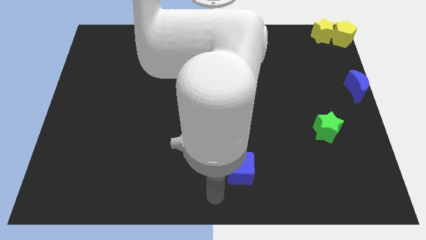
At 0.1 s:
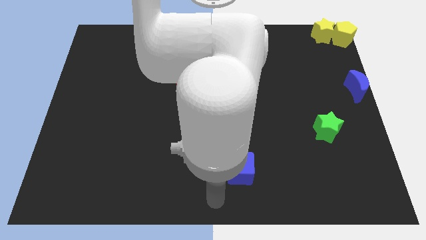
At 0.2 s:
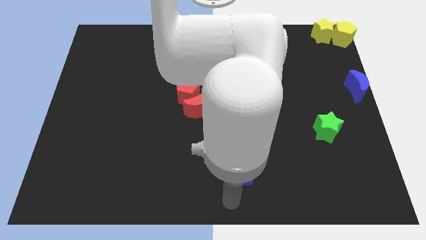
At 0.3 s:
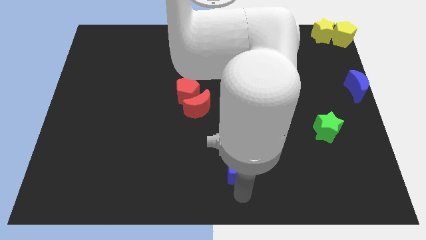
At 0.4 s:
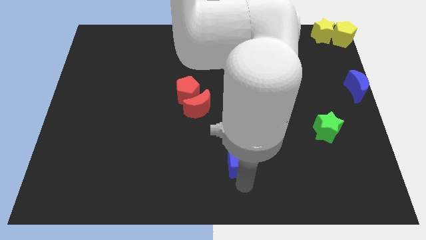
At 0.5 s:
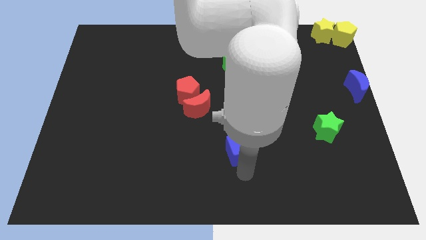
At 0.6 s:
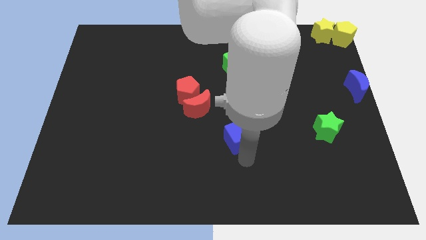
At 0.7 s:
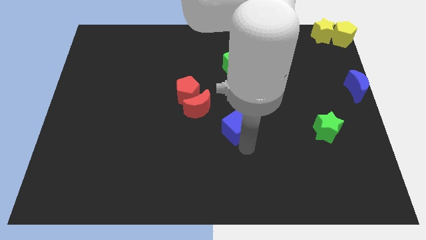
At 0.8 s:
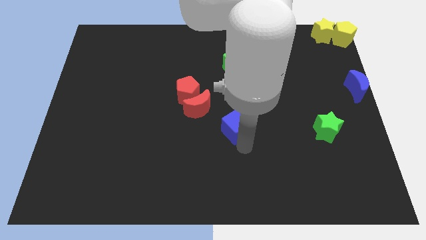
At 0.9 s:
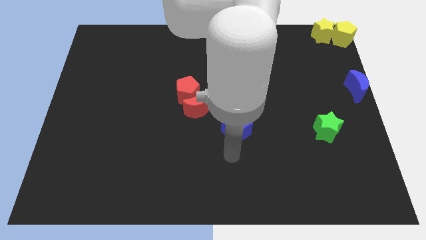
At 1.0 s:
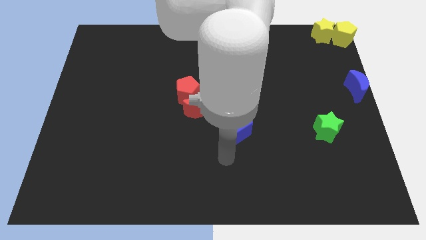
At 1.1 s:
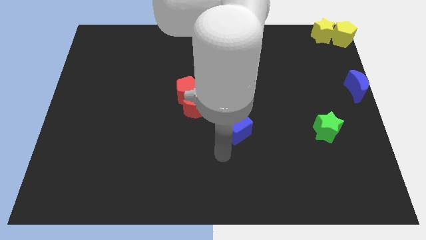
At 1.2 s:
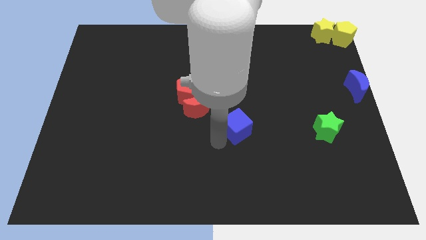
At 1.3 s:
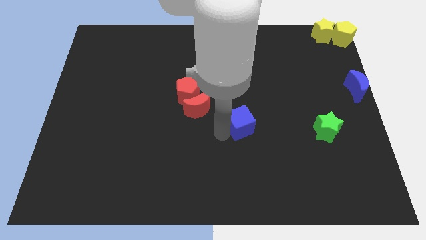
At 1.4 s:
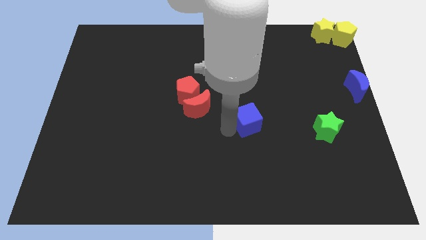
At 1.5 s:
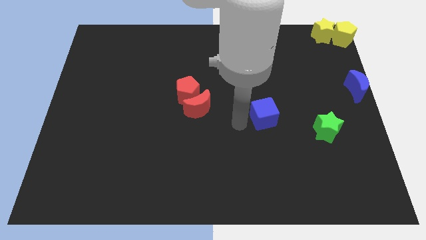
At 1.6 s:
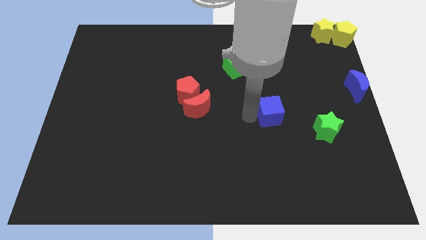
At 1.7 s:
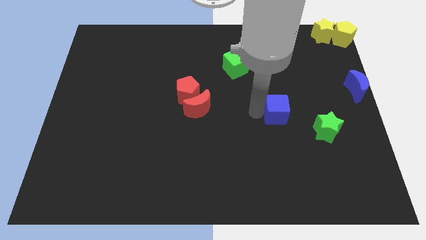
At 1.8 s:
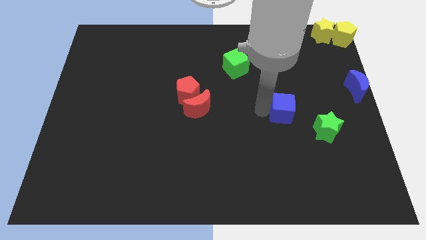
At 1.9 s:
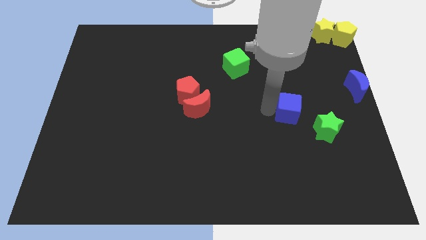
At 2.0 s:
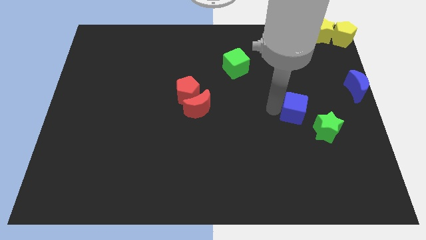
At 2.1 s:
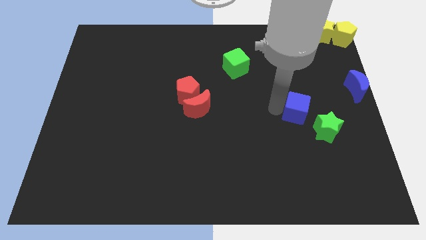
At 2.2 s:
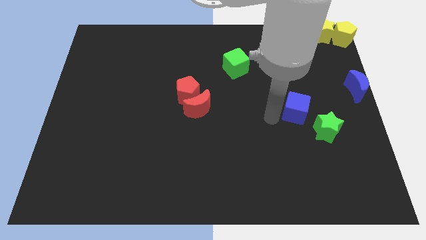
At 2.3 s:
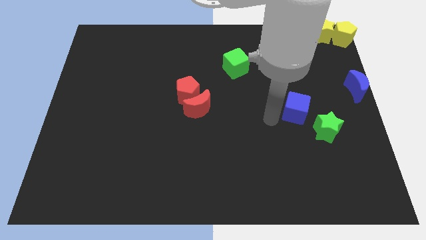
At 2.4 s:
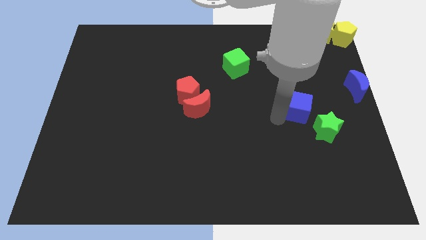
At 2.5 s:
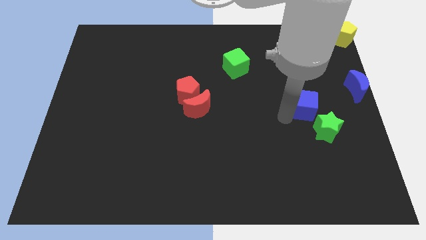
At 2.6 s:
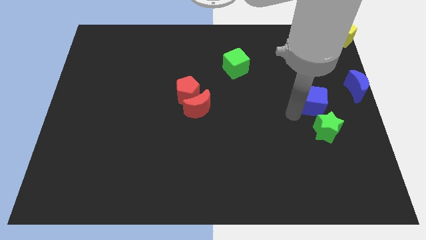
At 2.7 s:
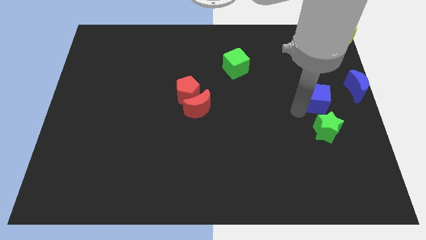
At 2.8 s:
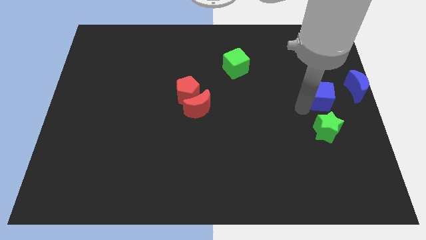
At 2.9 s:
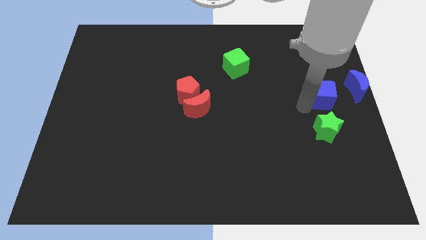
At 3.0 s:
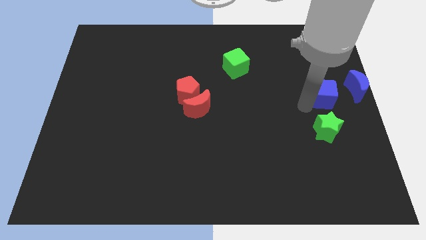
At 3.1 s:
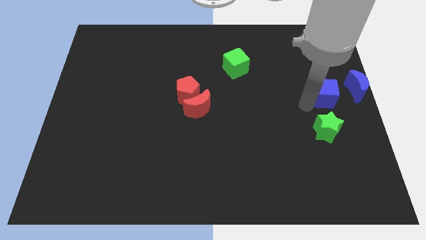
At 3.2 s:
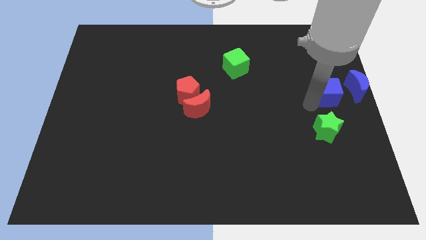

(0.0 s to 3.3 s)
move the blue cube to the top of the green star

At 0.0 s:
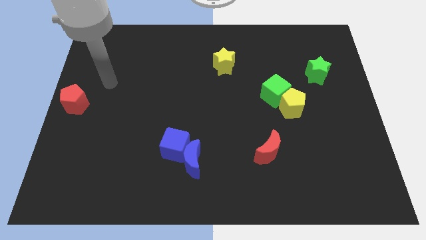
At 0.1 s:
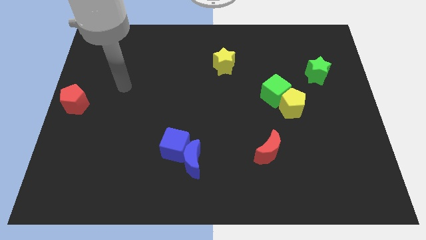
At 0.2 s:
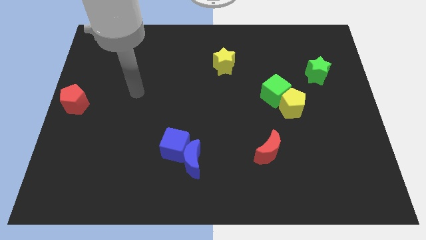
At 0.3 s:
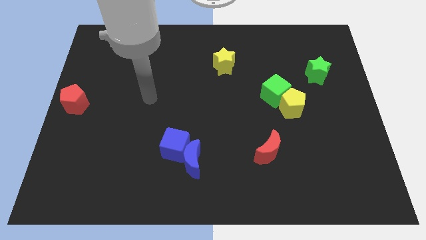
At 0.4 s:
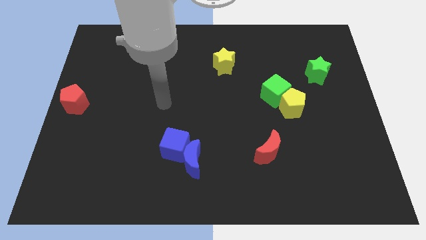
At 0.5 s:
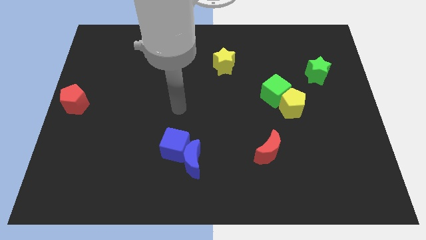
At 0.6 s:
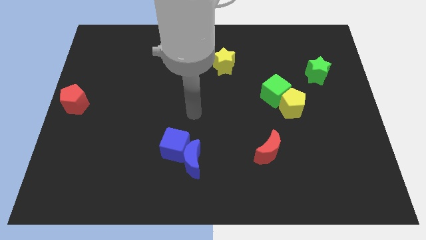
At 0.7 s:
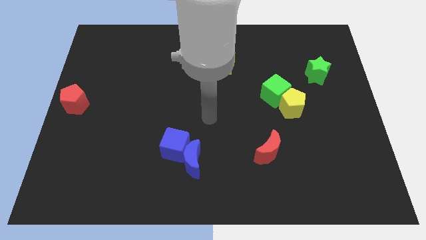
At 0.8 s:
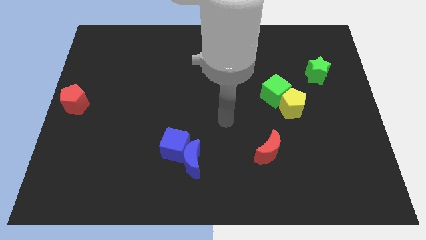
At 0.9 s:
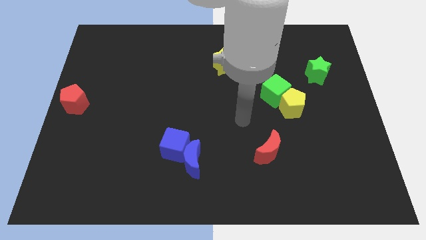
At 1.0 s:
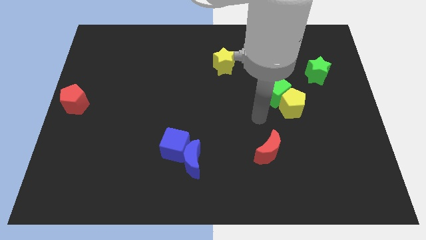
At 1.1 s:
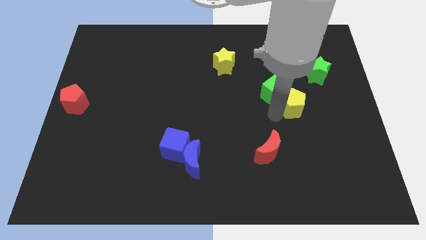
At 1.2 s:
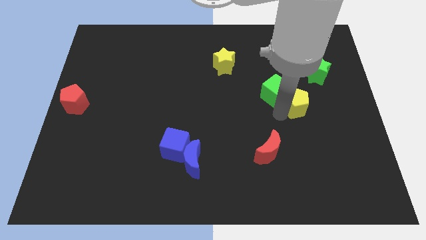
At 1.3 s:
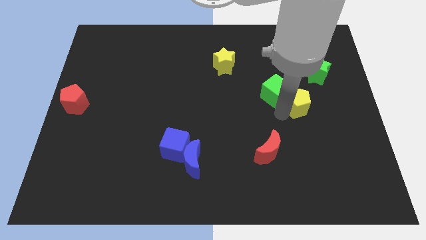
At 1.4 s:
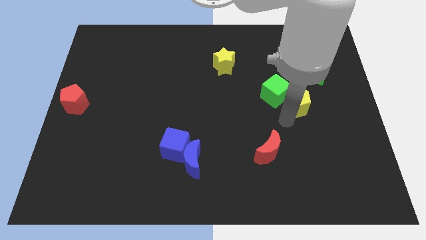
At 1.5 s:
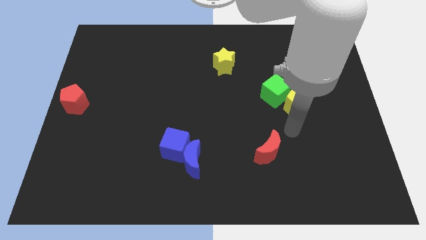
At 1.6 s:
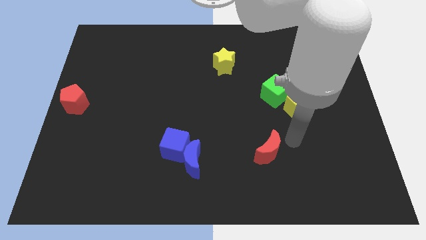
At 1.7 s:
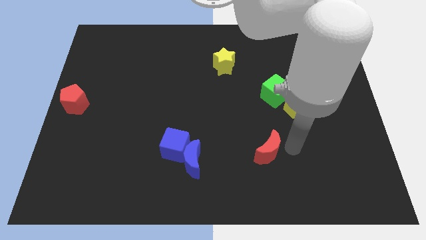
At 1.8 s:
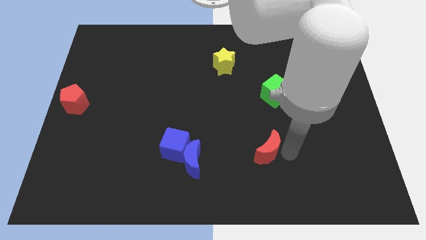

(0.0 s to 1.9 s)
move the arm right to the red moon

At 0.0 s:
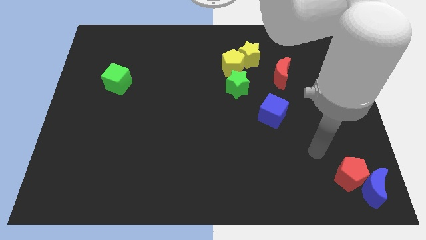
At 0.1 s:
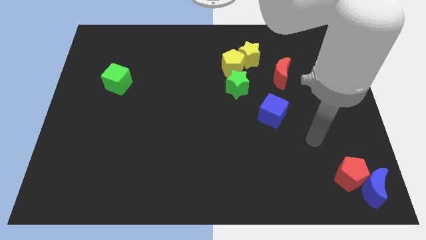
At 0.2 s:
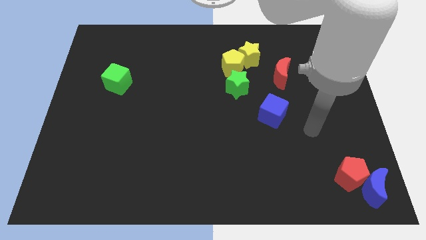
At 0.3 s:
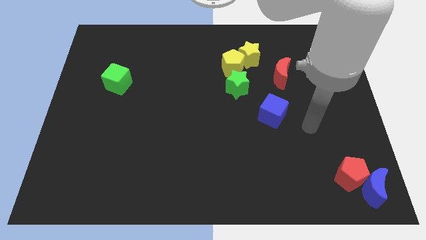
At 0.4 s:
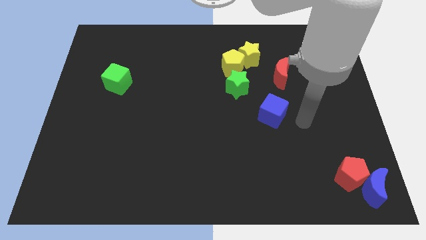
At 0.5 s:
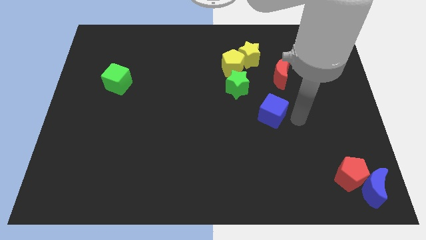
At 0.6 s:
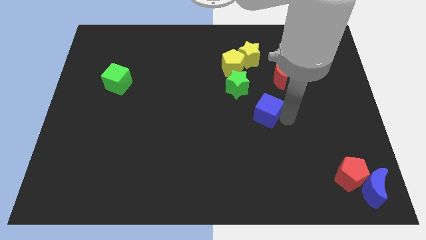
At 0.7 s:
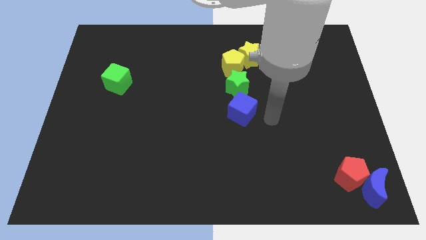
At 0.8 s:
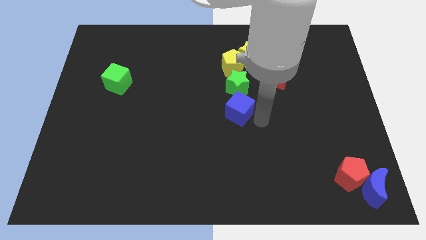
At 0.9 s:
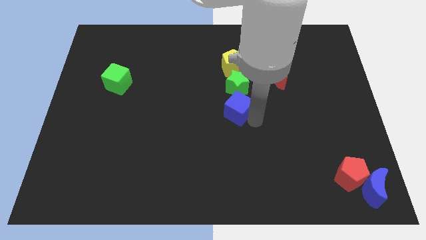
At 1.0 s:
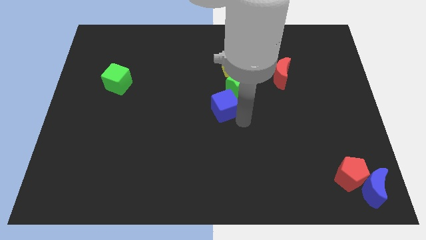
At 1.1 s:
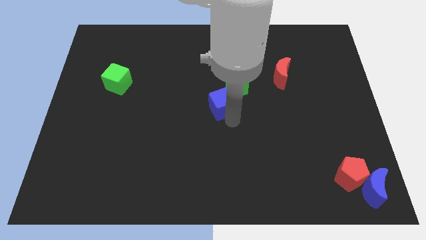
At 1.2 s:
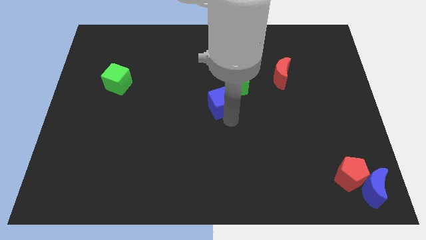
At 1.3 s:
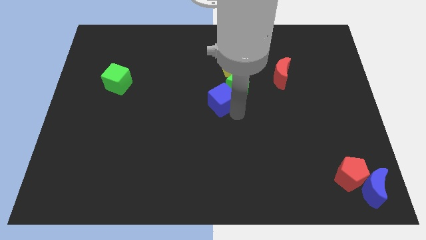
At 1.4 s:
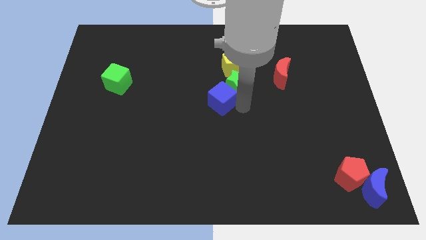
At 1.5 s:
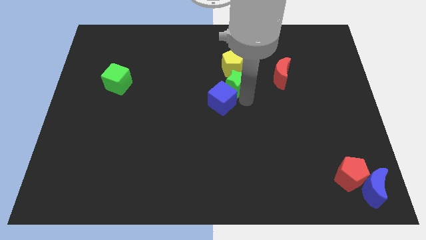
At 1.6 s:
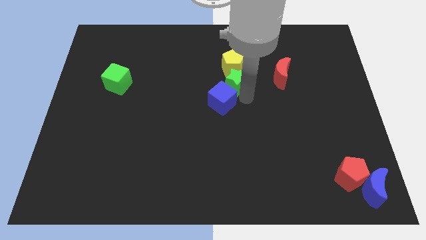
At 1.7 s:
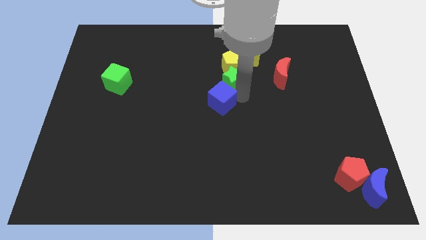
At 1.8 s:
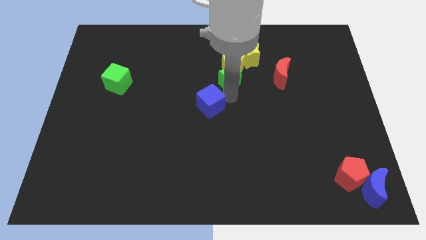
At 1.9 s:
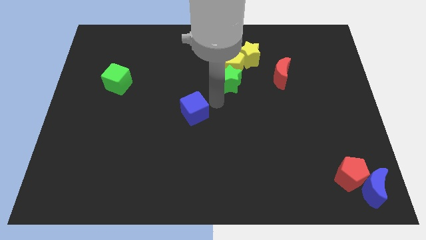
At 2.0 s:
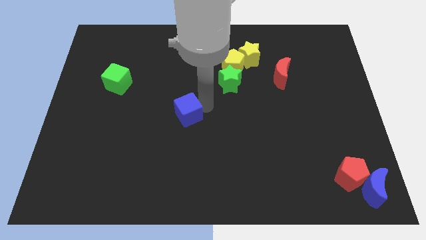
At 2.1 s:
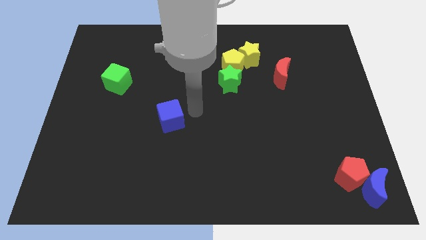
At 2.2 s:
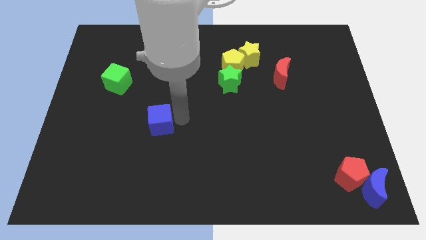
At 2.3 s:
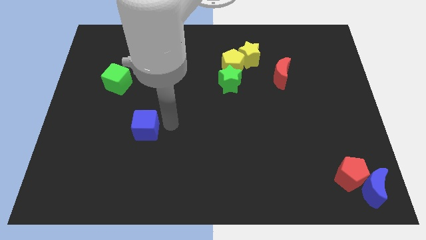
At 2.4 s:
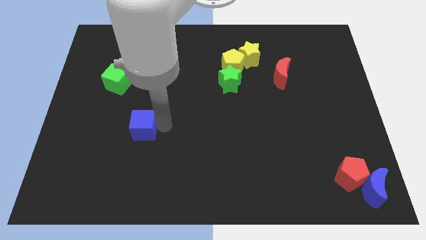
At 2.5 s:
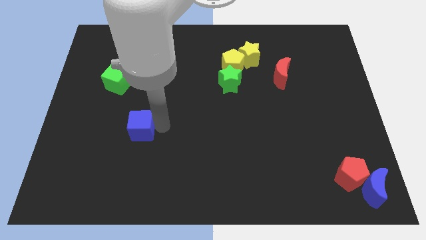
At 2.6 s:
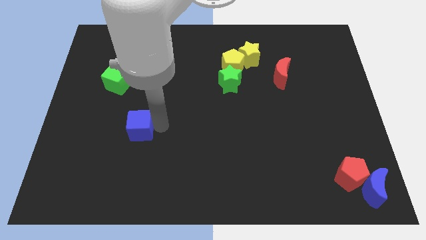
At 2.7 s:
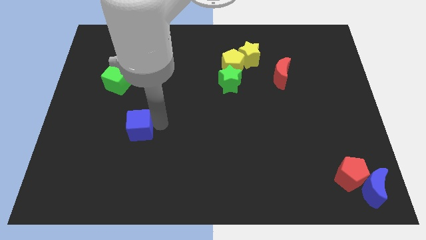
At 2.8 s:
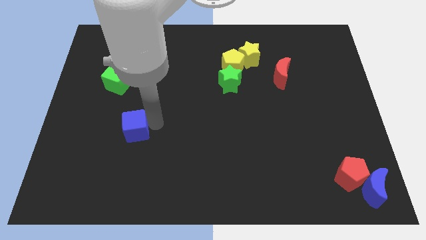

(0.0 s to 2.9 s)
push blue cube below green cube

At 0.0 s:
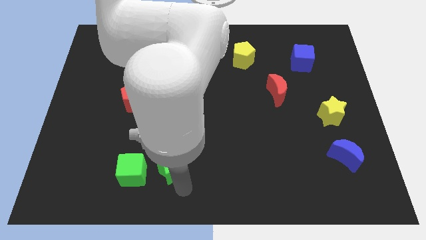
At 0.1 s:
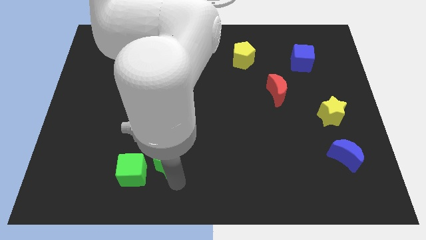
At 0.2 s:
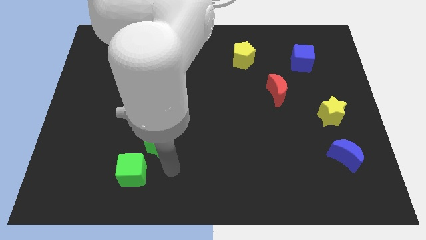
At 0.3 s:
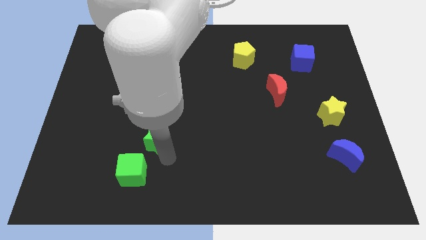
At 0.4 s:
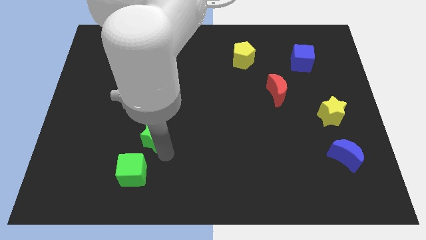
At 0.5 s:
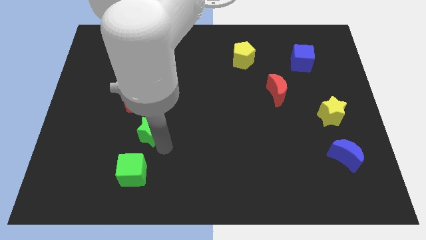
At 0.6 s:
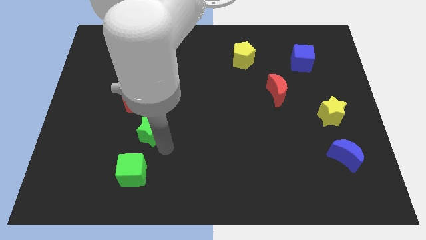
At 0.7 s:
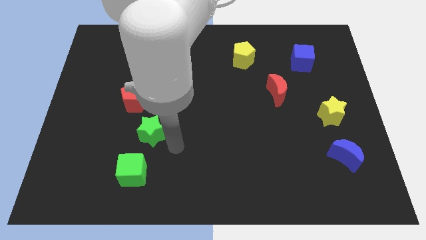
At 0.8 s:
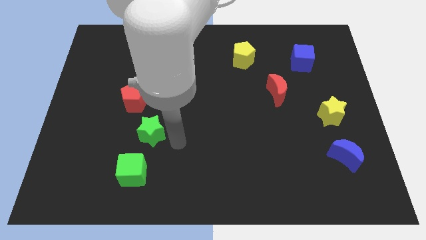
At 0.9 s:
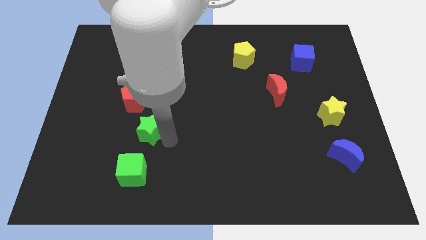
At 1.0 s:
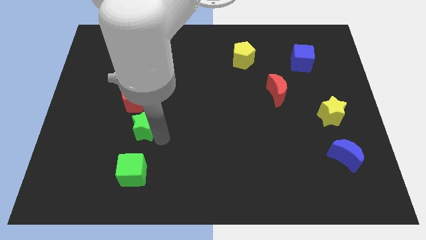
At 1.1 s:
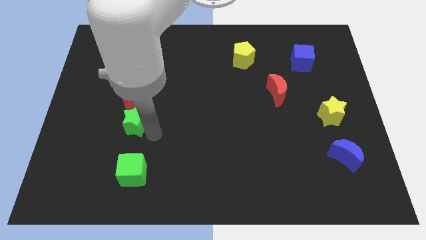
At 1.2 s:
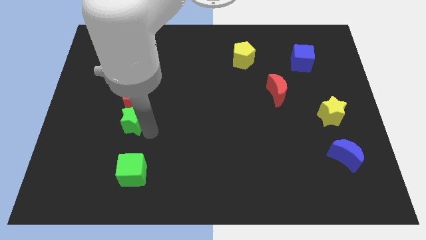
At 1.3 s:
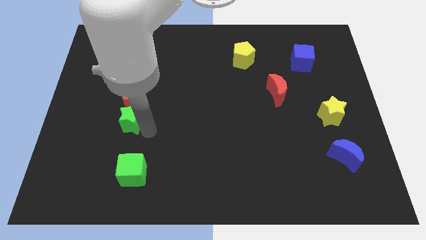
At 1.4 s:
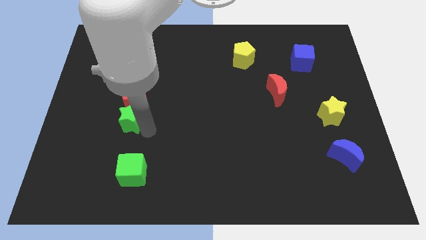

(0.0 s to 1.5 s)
push the green star below the red pentagon
